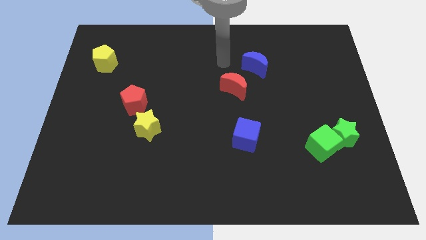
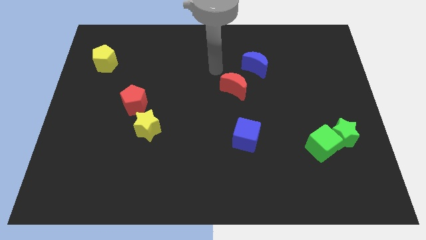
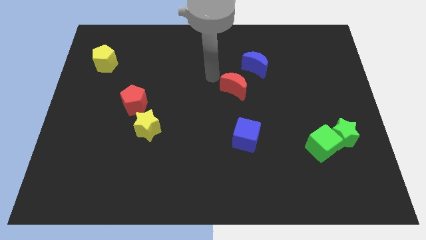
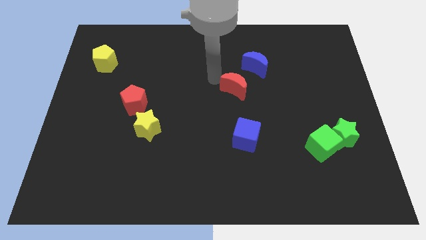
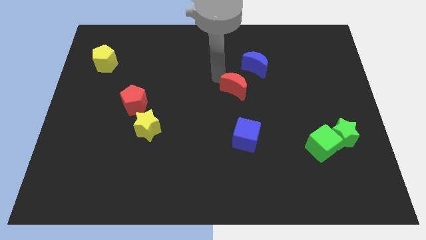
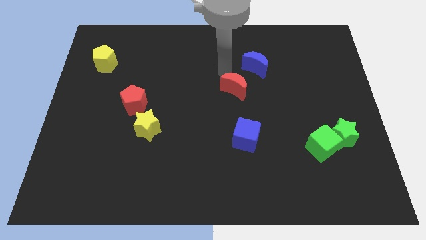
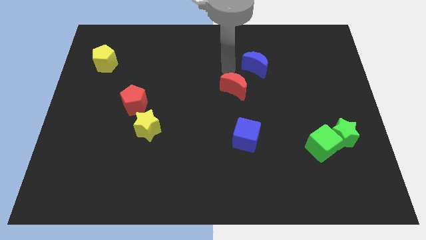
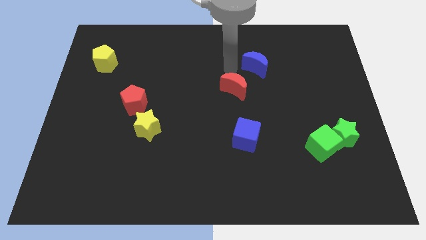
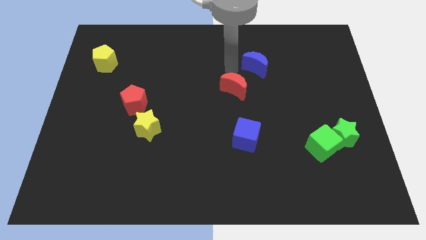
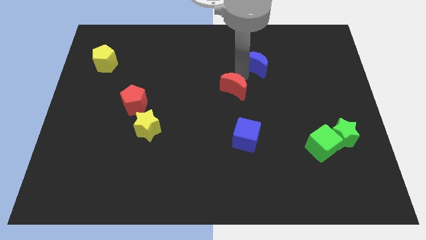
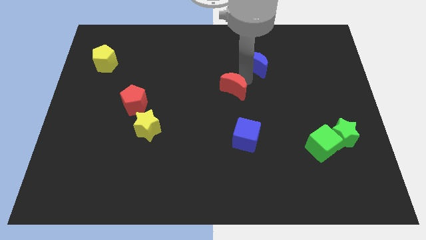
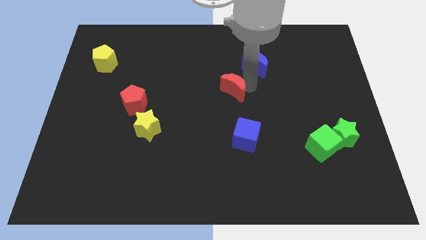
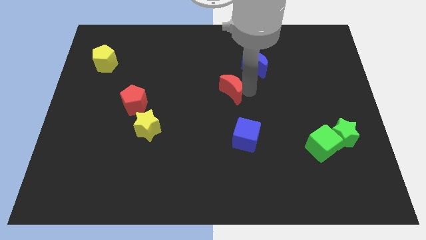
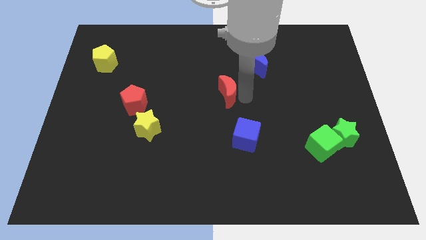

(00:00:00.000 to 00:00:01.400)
place the red crescent above the blue cube

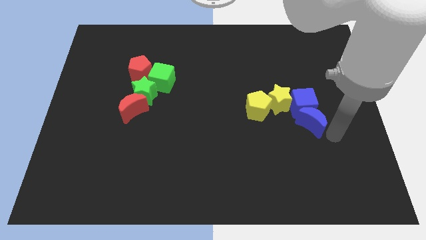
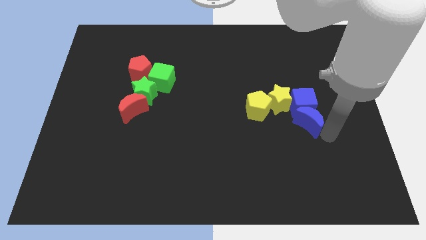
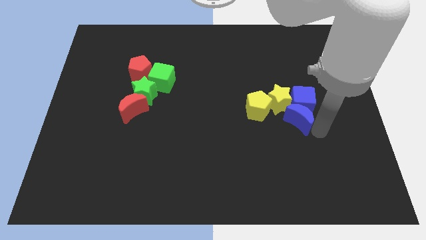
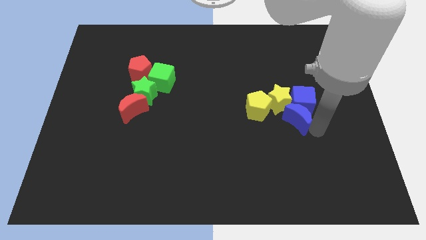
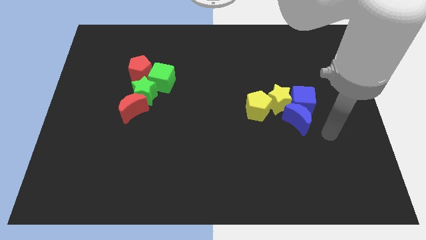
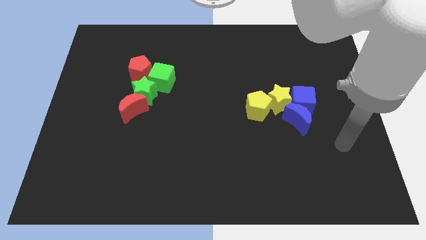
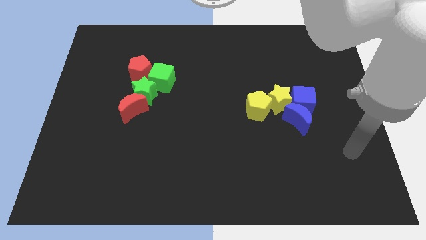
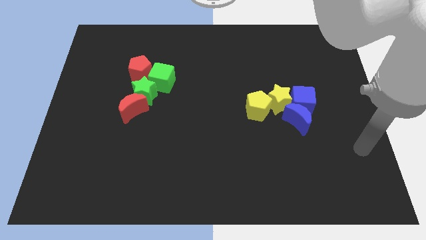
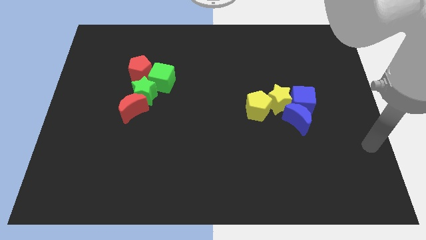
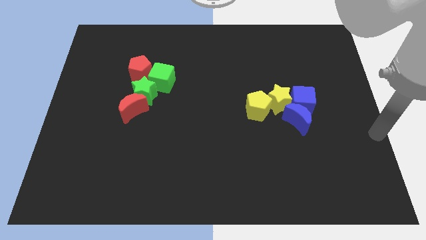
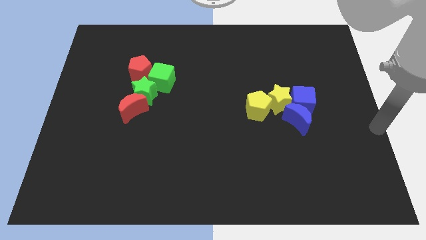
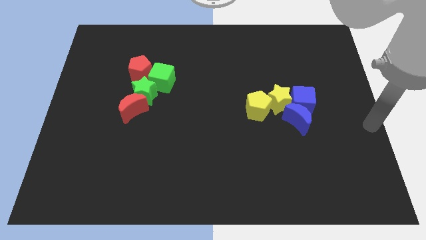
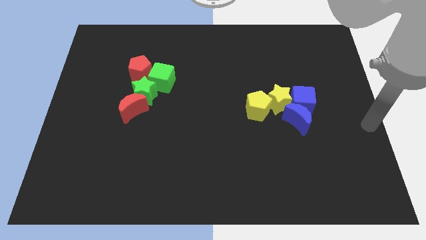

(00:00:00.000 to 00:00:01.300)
move the arm away from blue crescent

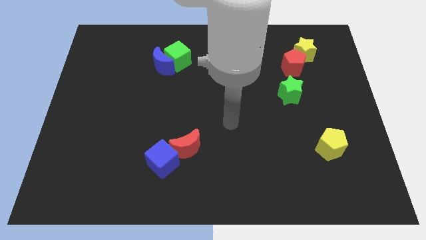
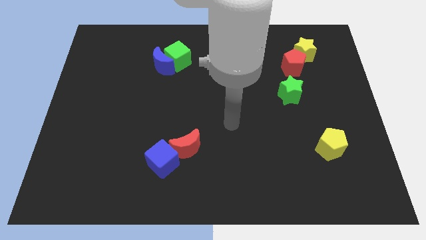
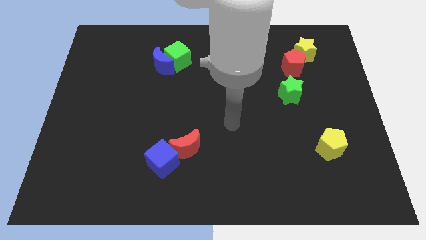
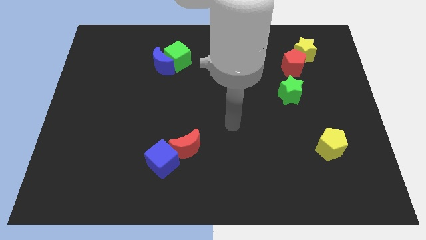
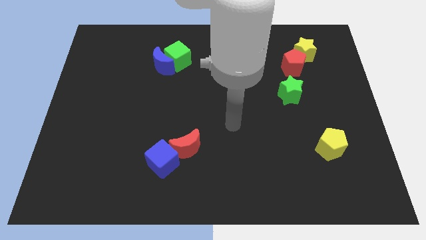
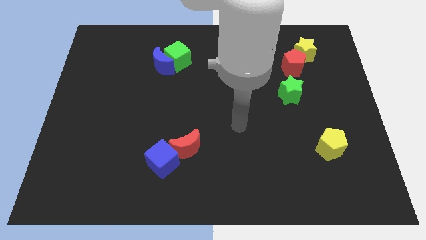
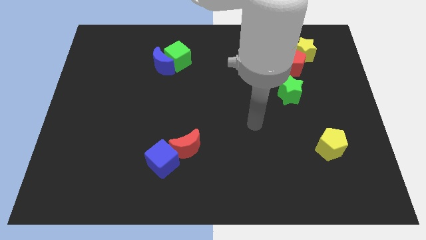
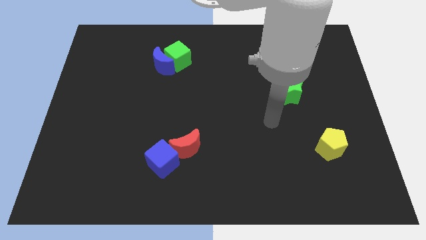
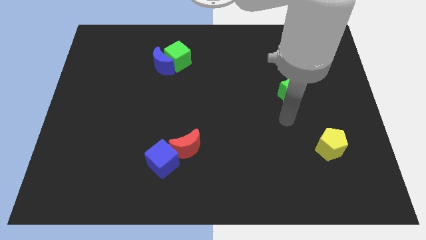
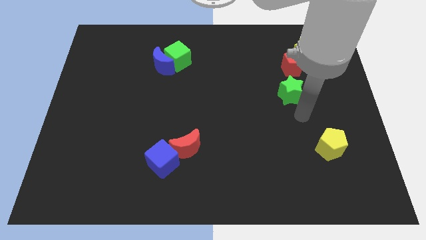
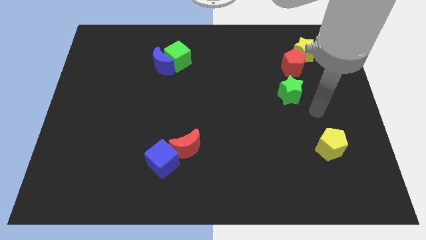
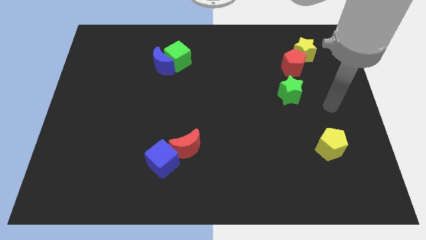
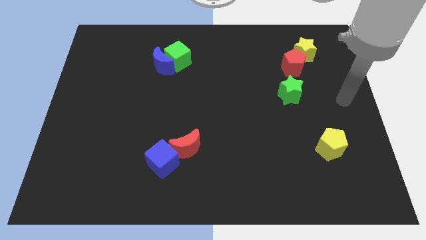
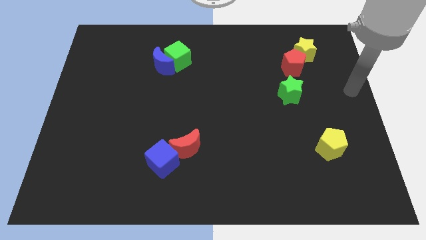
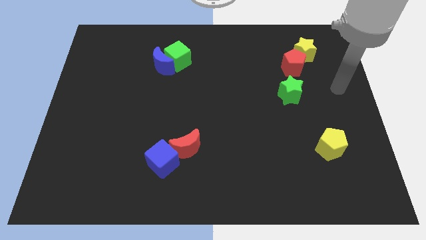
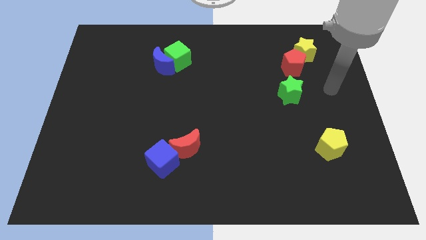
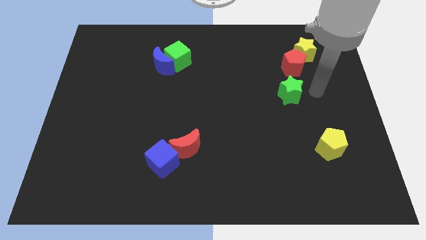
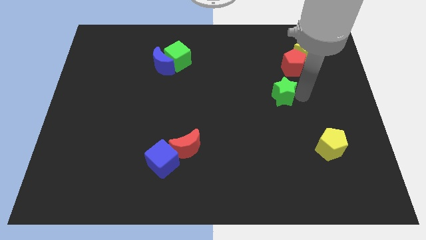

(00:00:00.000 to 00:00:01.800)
move your arm to the right side of the green star

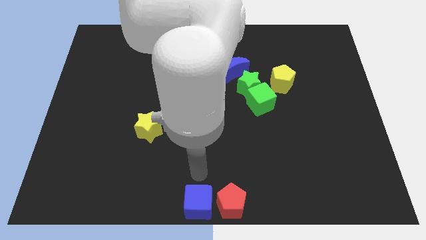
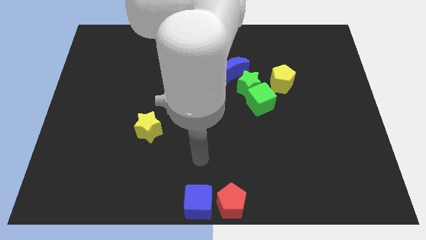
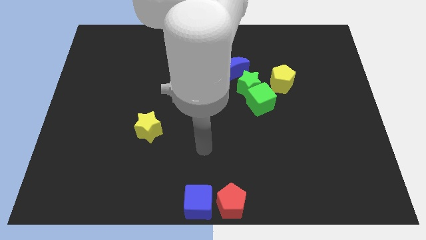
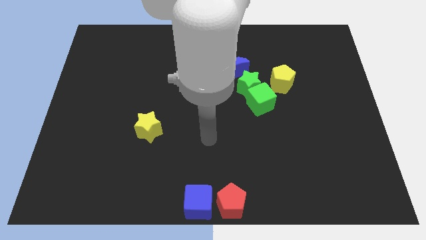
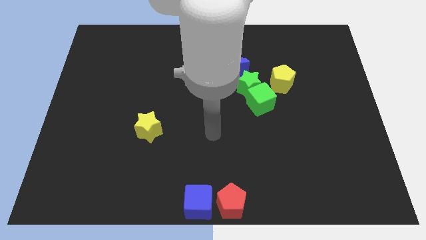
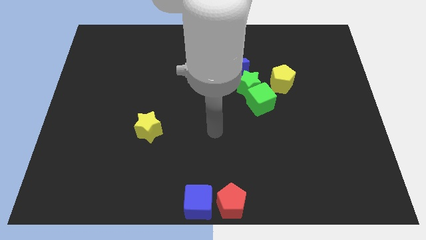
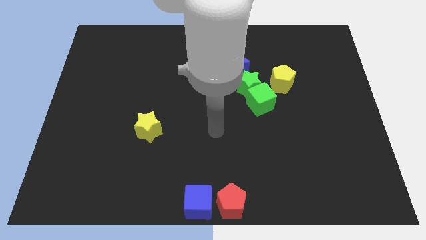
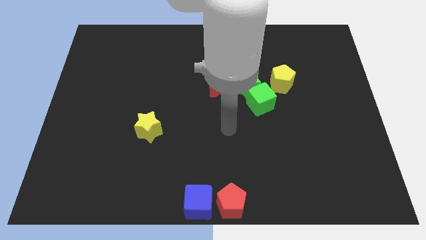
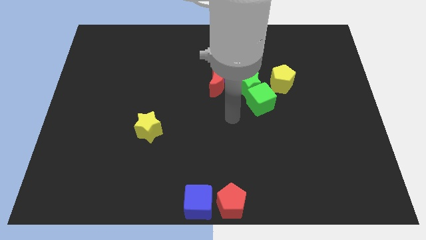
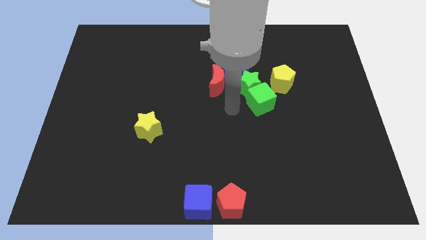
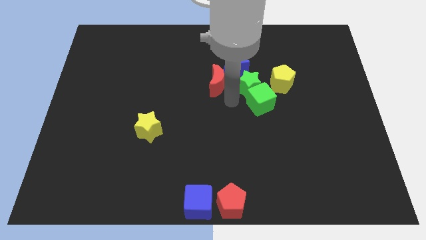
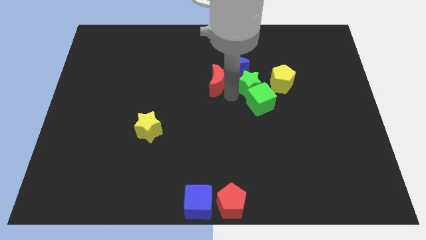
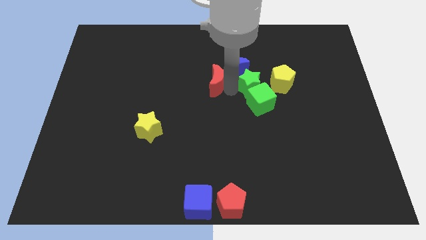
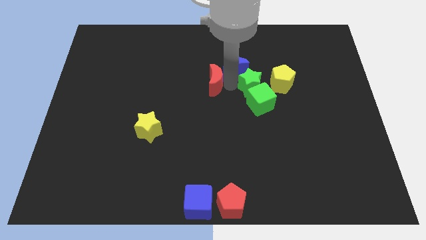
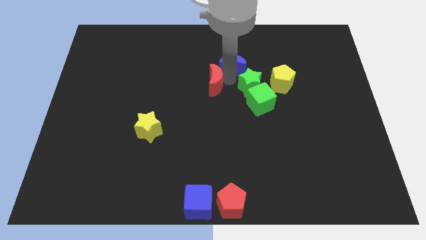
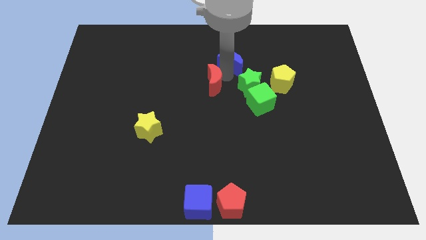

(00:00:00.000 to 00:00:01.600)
move the blue crescent slightly to the top

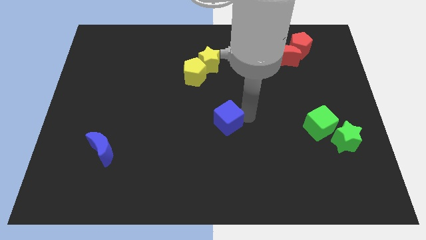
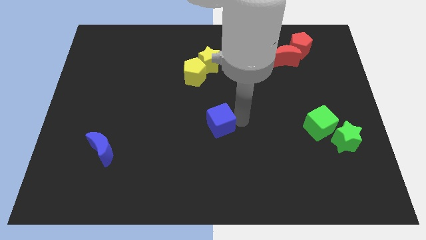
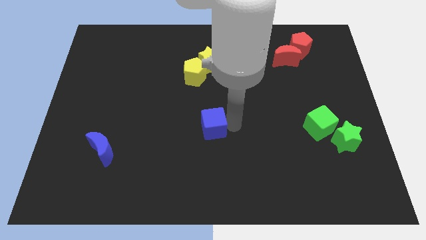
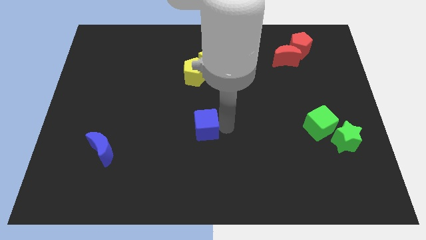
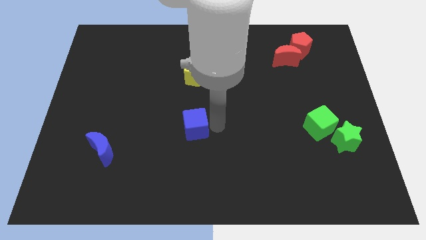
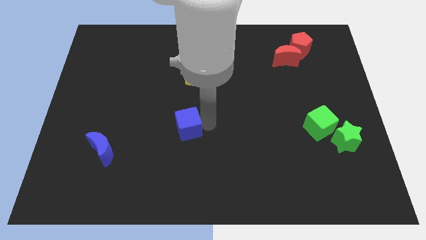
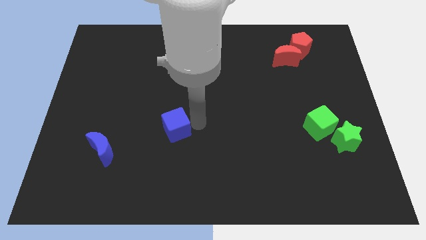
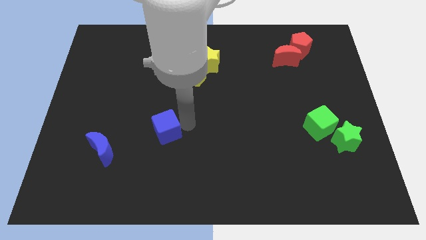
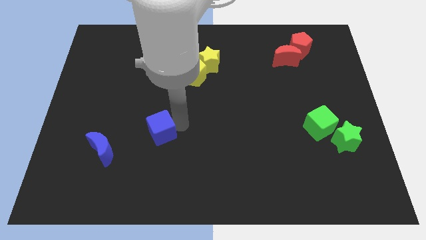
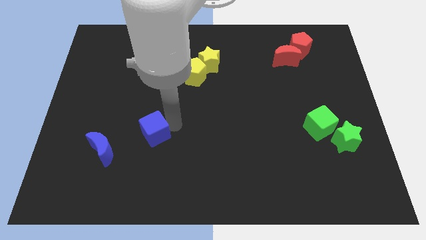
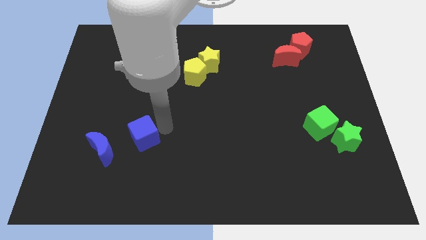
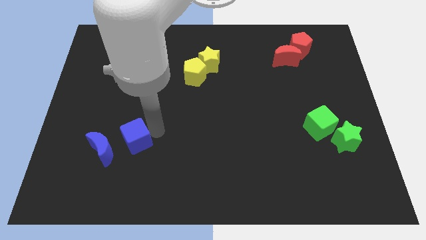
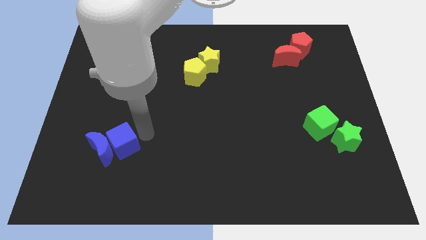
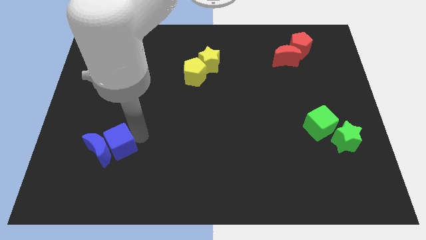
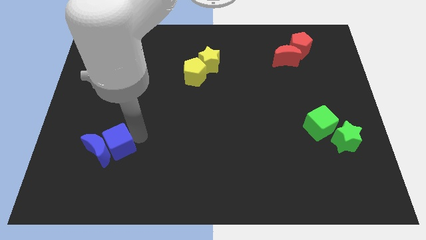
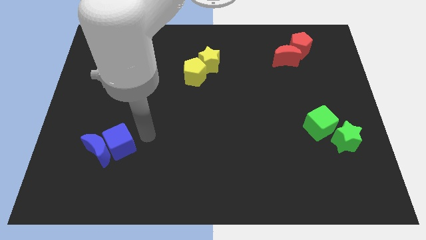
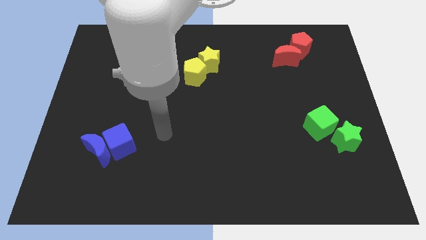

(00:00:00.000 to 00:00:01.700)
push the blue cube into the blue moon

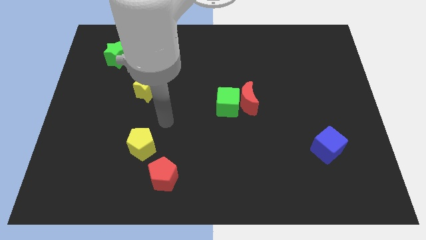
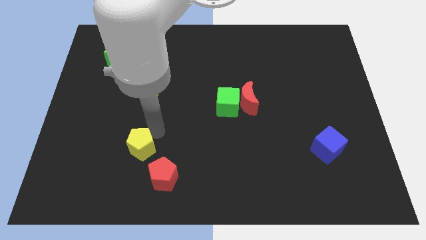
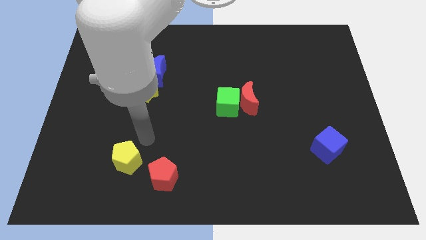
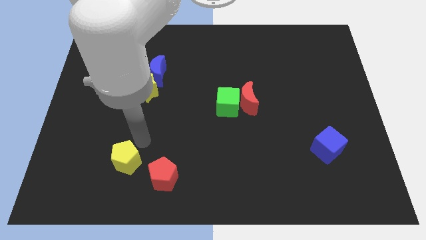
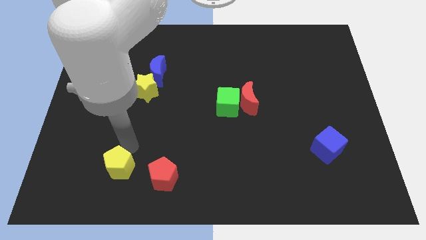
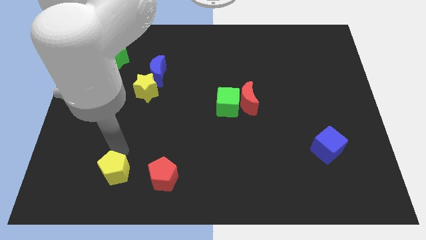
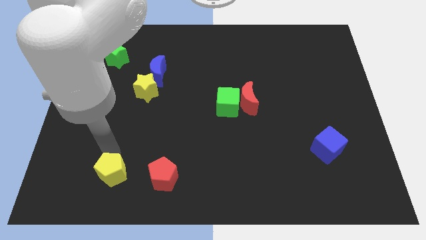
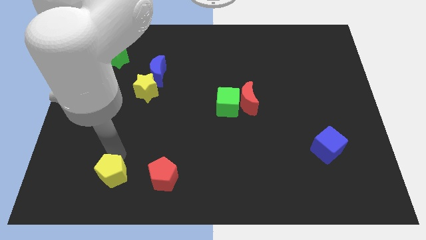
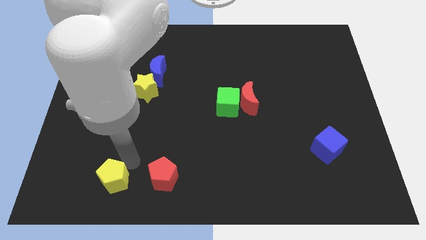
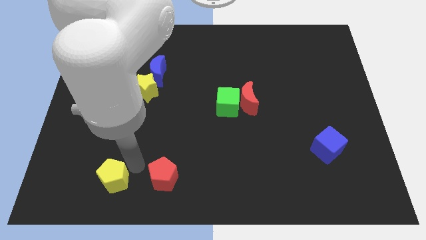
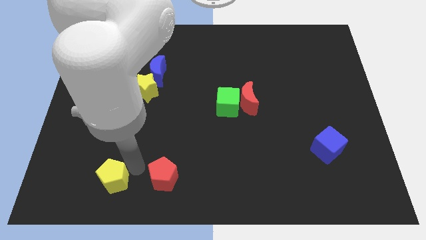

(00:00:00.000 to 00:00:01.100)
push the yellow pentagon towards the left of the red pentagon

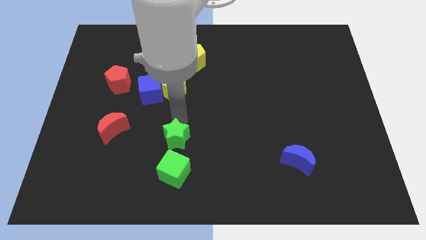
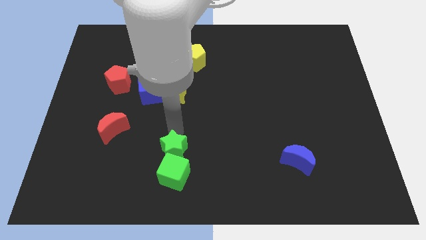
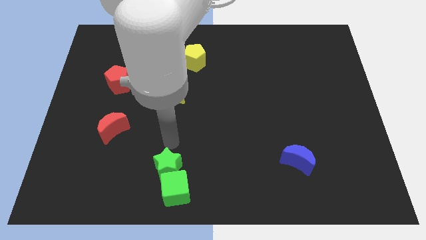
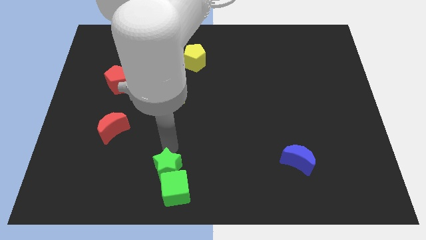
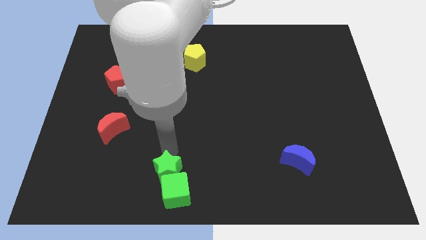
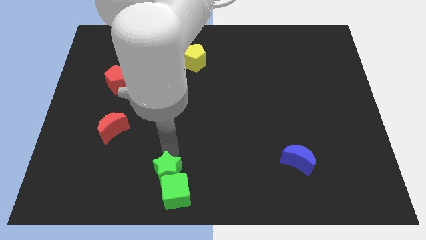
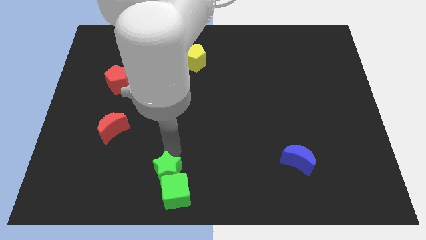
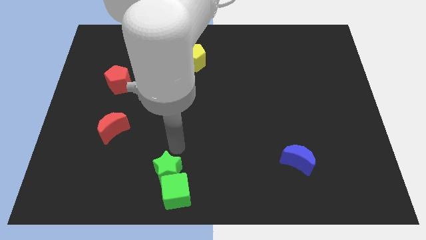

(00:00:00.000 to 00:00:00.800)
move green blocks in the bottom center
